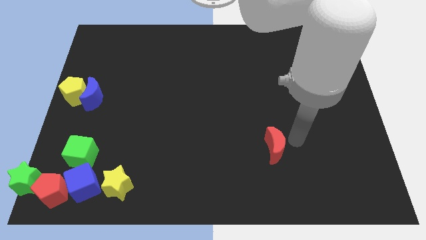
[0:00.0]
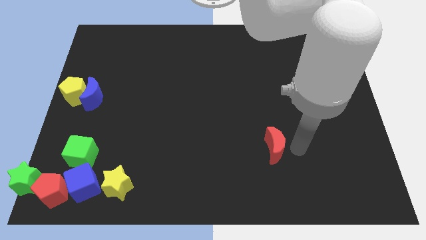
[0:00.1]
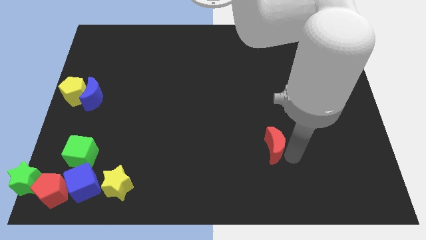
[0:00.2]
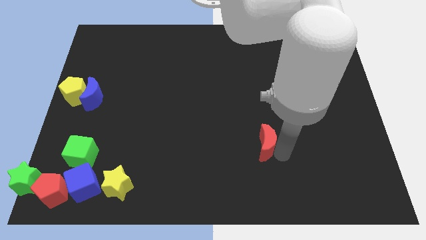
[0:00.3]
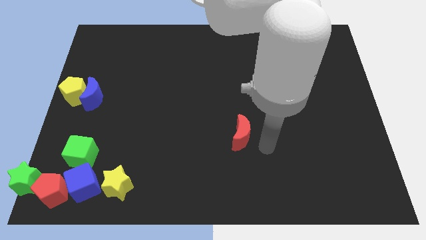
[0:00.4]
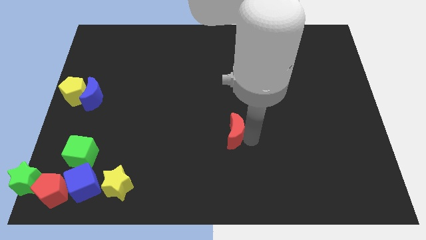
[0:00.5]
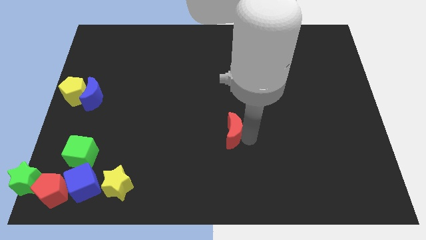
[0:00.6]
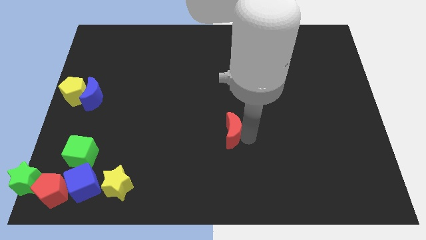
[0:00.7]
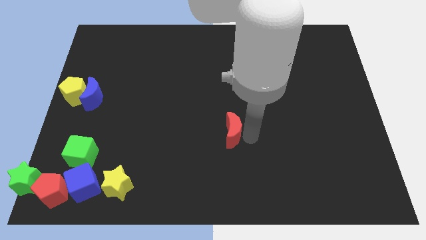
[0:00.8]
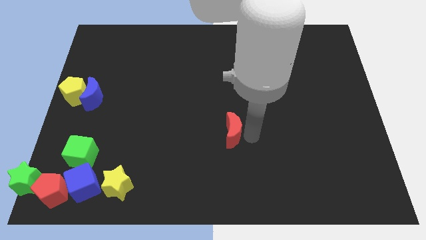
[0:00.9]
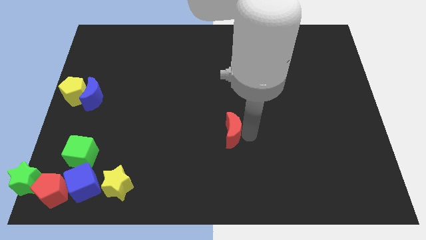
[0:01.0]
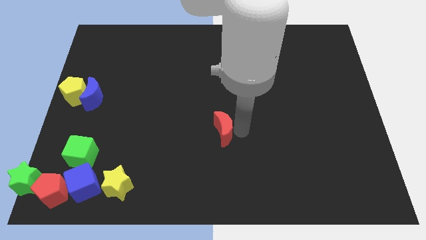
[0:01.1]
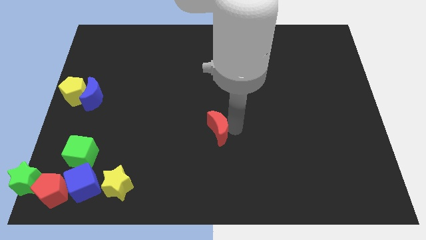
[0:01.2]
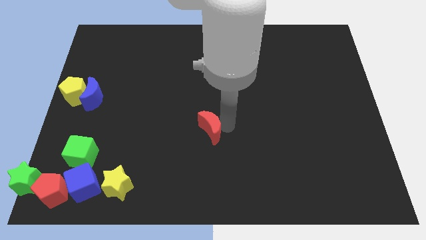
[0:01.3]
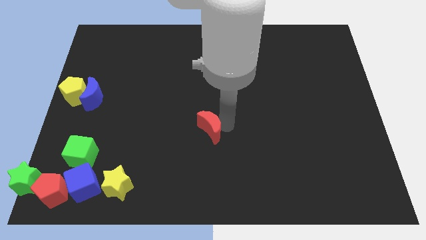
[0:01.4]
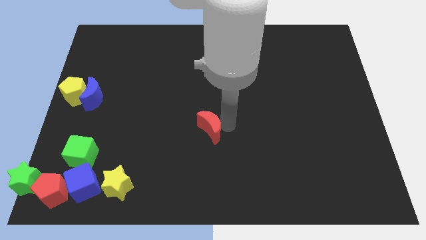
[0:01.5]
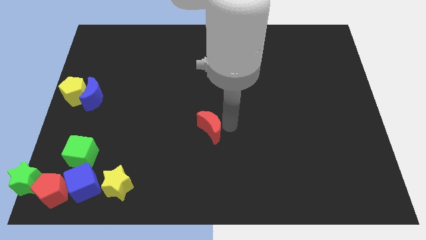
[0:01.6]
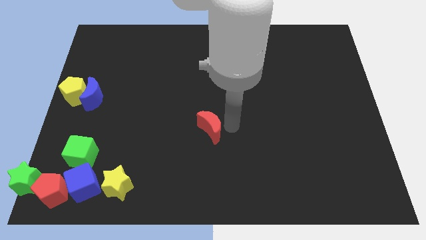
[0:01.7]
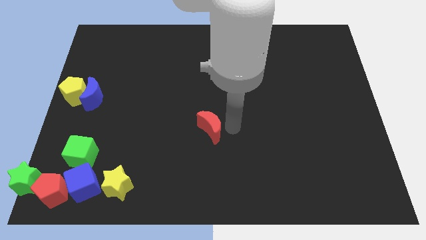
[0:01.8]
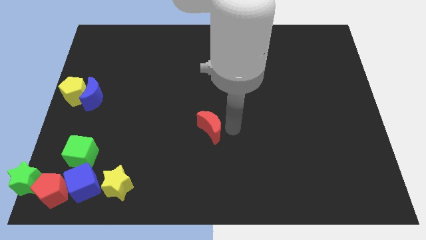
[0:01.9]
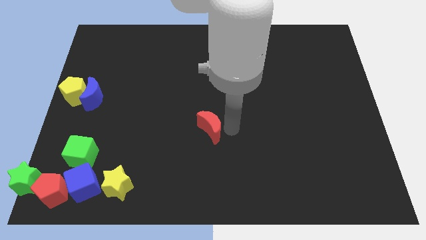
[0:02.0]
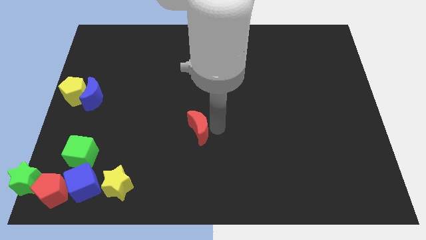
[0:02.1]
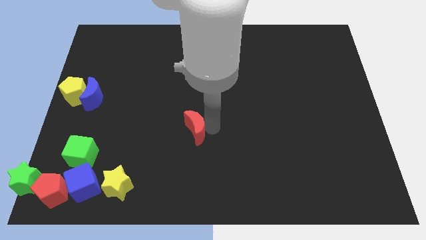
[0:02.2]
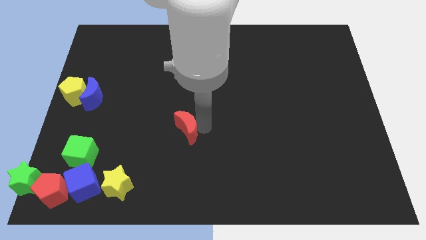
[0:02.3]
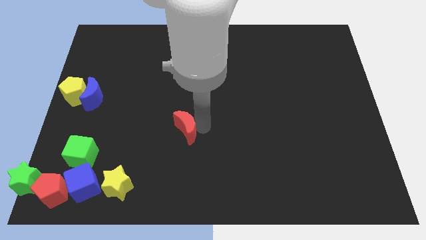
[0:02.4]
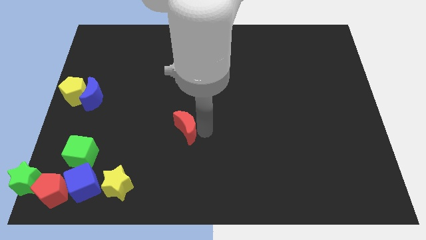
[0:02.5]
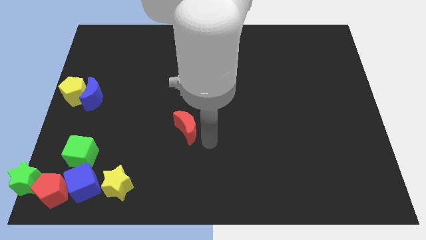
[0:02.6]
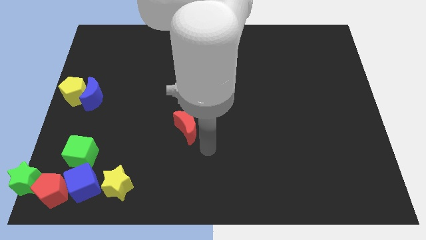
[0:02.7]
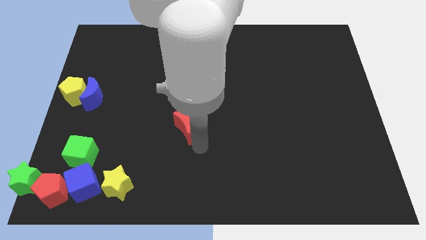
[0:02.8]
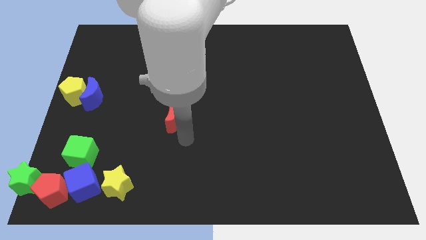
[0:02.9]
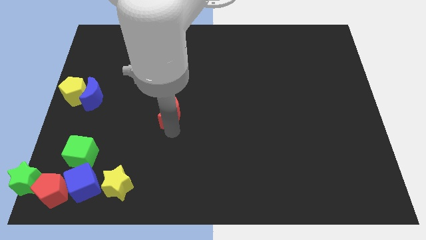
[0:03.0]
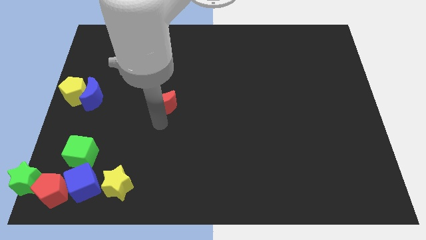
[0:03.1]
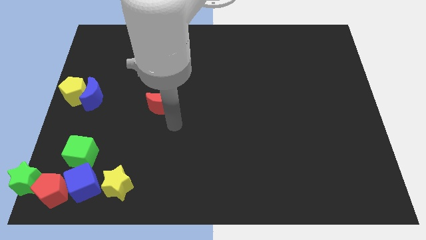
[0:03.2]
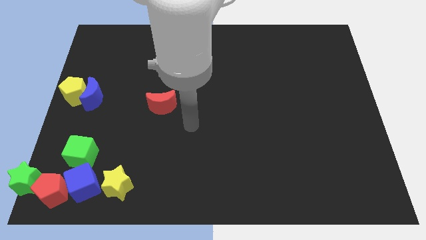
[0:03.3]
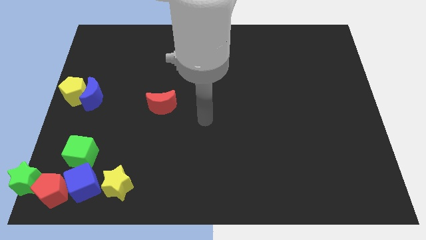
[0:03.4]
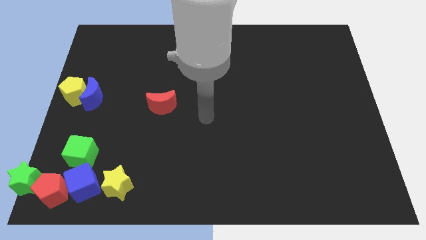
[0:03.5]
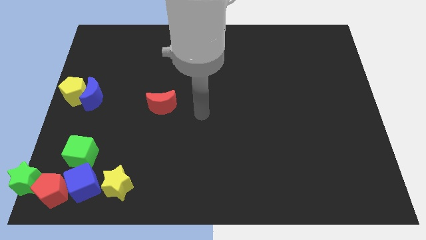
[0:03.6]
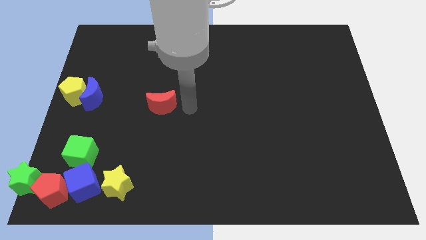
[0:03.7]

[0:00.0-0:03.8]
slightly push the red crescent to the left

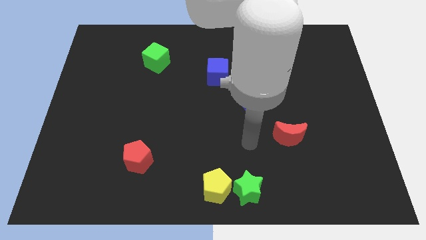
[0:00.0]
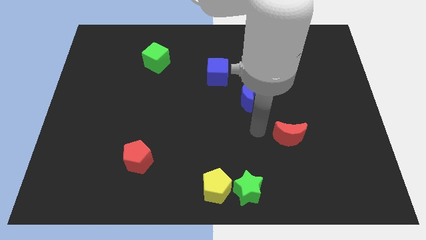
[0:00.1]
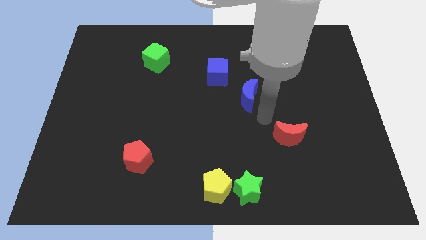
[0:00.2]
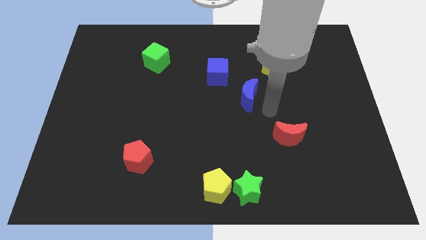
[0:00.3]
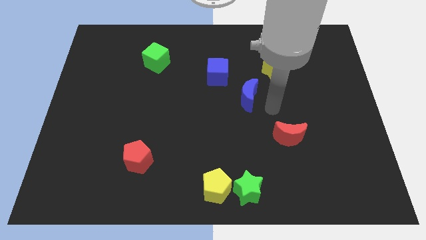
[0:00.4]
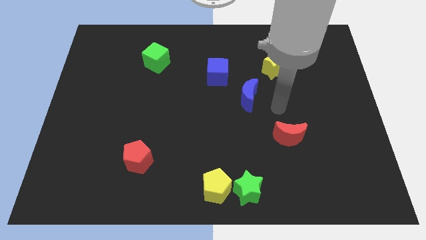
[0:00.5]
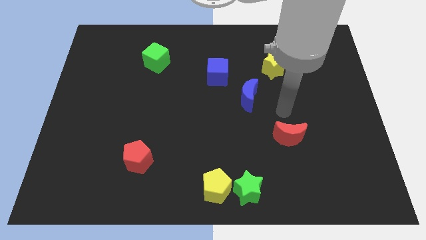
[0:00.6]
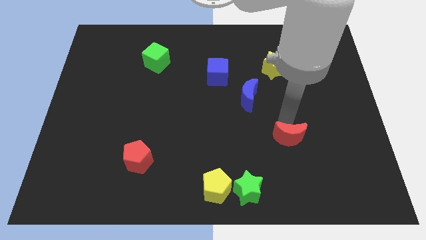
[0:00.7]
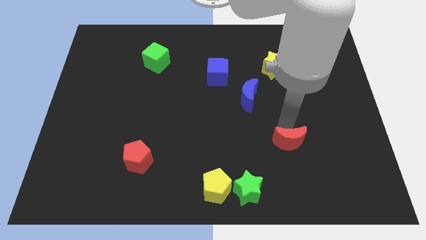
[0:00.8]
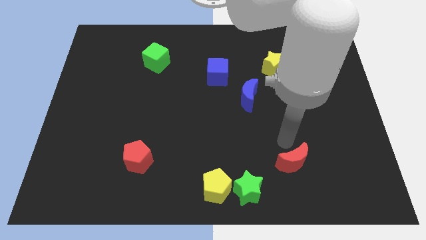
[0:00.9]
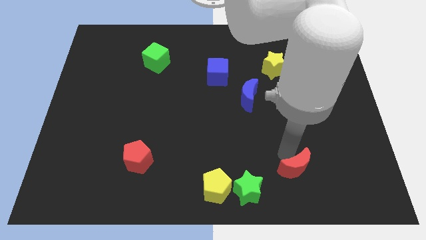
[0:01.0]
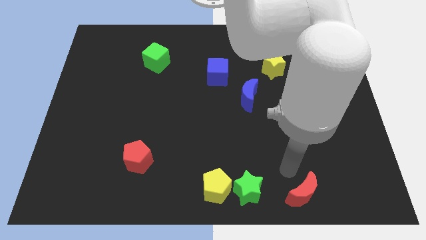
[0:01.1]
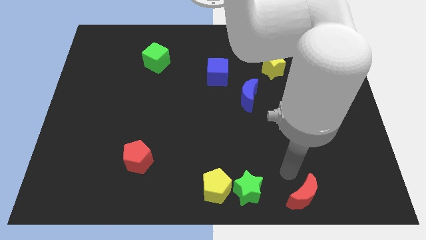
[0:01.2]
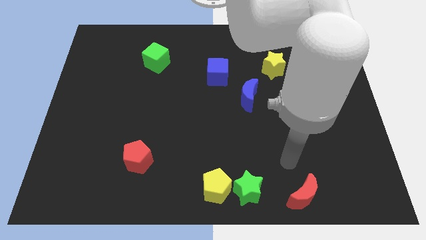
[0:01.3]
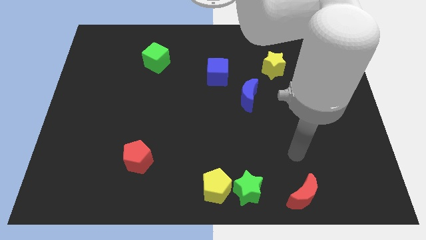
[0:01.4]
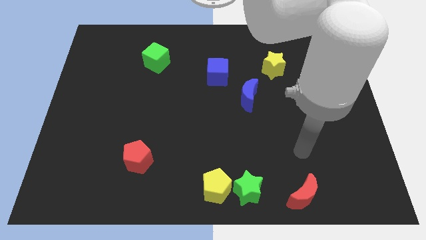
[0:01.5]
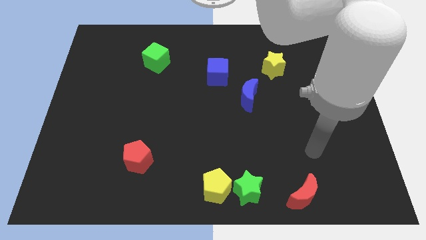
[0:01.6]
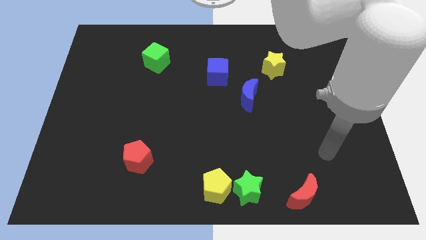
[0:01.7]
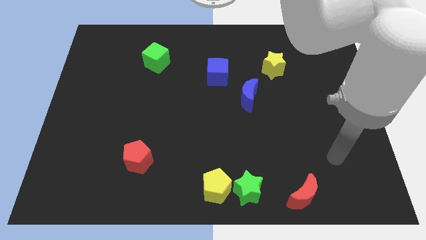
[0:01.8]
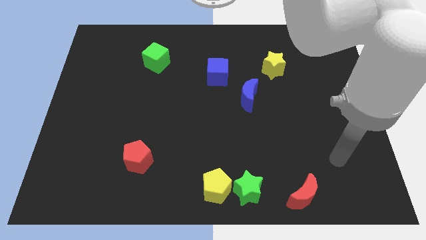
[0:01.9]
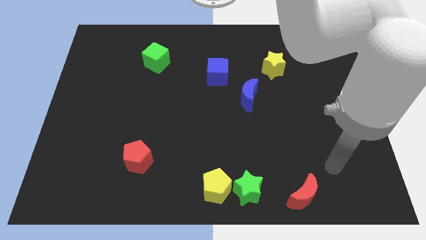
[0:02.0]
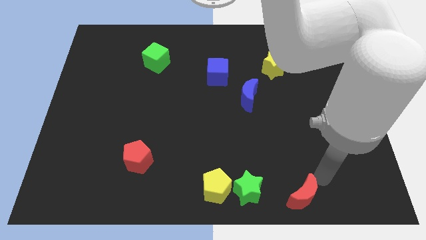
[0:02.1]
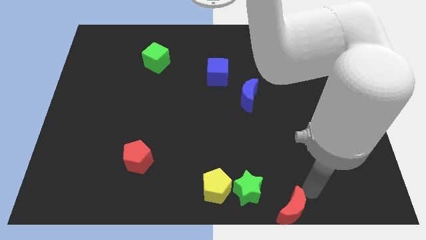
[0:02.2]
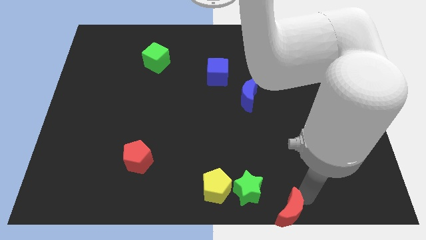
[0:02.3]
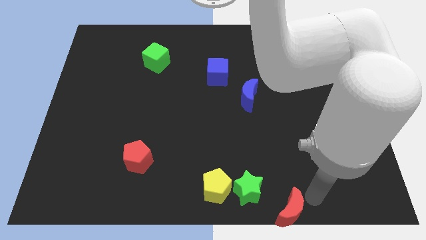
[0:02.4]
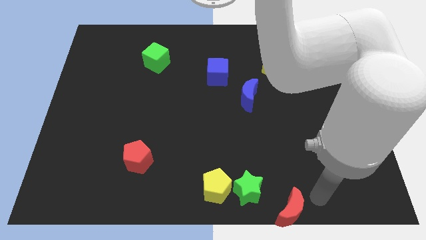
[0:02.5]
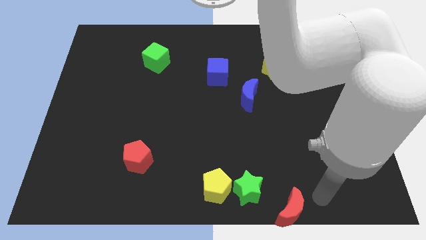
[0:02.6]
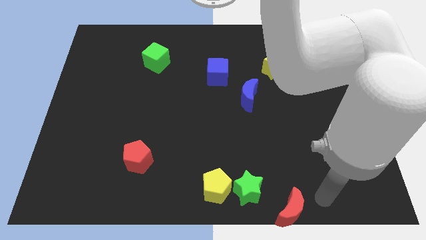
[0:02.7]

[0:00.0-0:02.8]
push the red moon to the bottom right side of the green star

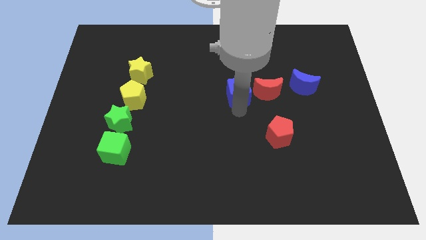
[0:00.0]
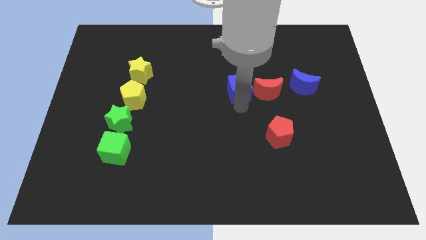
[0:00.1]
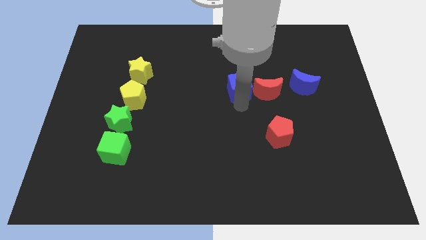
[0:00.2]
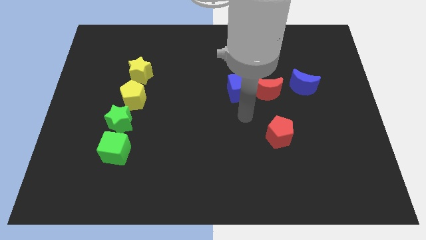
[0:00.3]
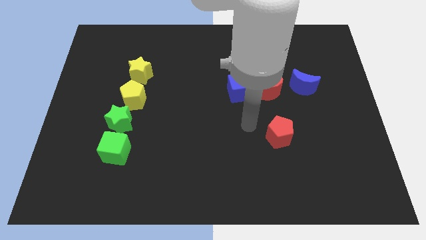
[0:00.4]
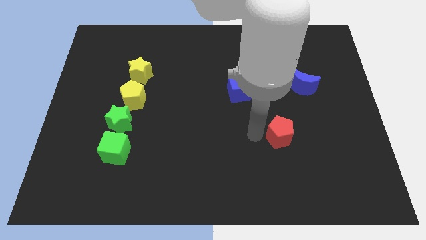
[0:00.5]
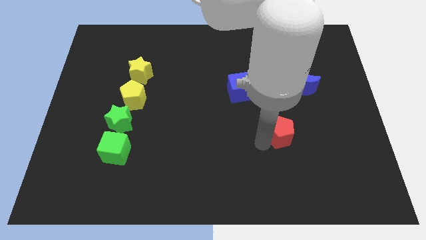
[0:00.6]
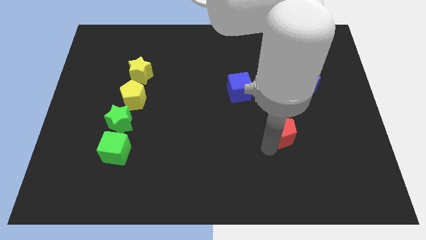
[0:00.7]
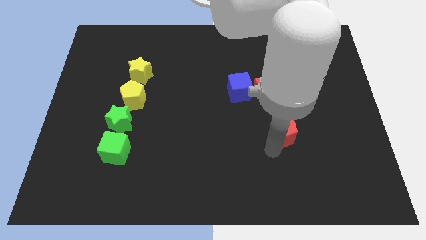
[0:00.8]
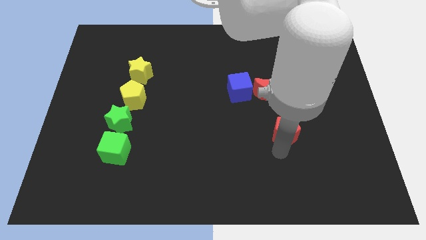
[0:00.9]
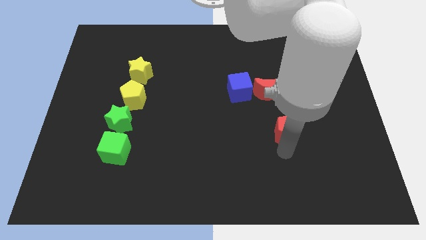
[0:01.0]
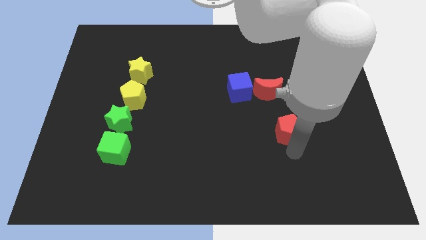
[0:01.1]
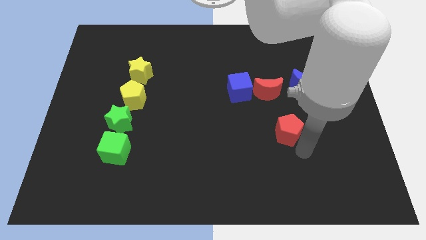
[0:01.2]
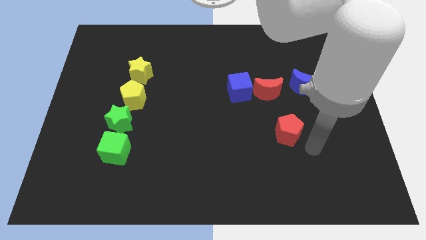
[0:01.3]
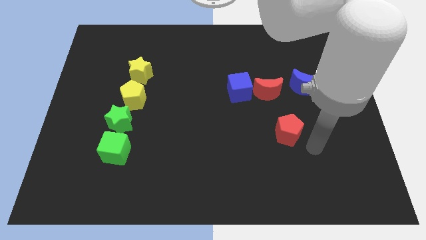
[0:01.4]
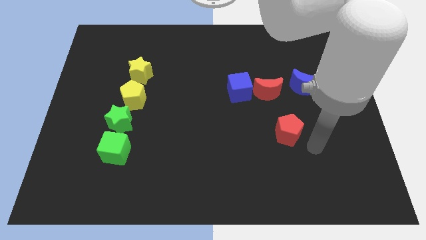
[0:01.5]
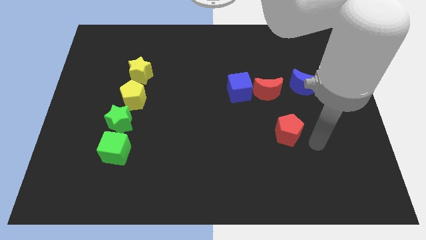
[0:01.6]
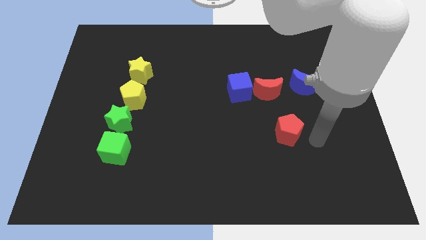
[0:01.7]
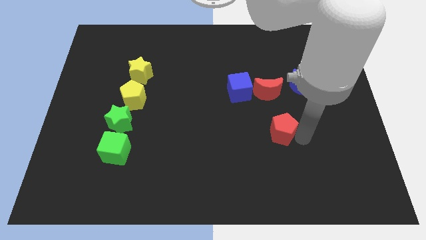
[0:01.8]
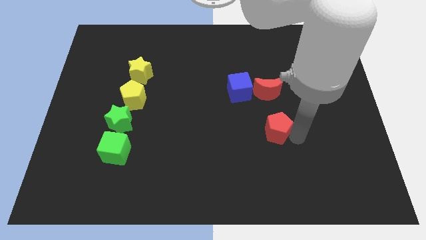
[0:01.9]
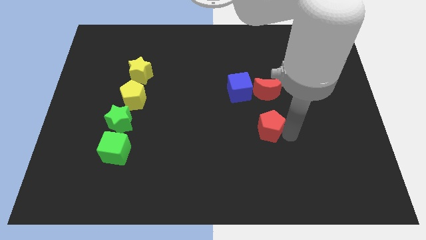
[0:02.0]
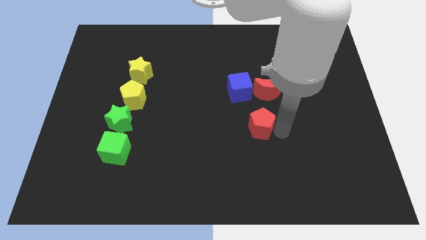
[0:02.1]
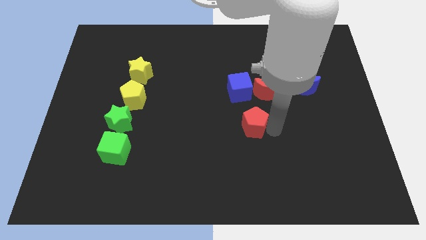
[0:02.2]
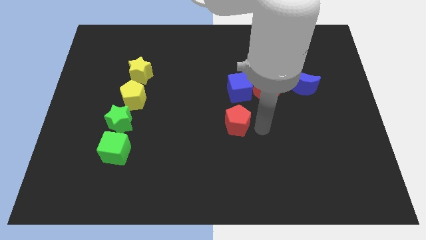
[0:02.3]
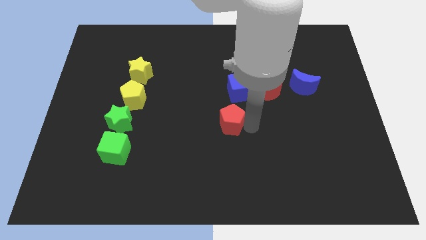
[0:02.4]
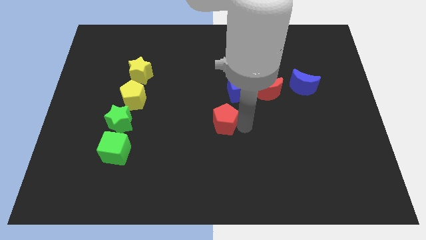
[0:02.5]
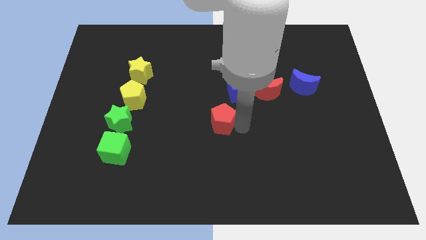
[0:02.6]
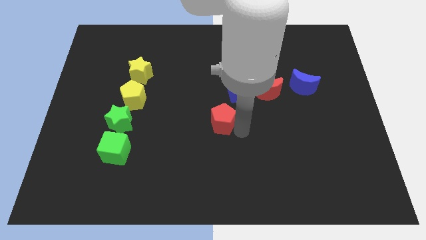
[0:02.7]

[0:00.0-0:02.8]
move the red pentagon diagonal to the blue cube
